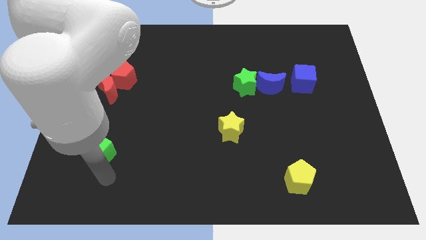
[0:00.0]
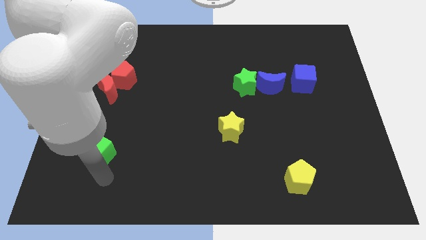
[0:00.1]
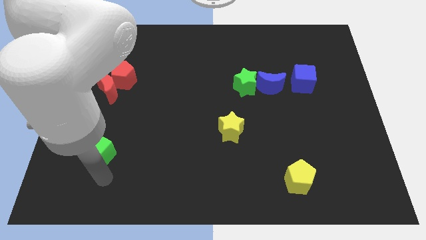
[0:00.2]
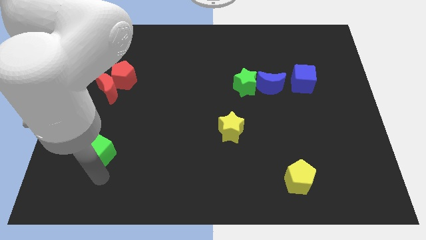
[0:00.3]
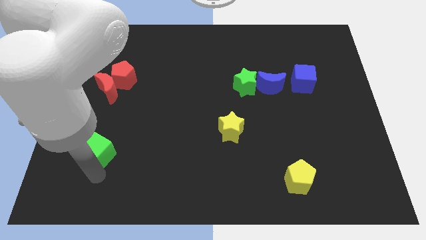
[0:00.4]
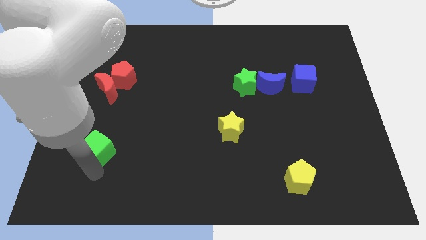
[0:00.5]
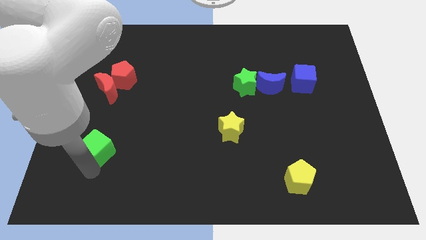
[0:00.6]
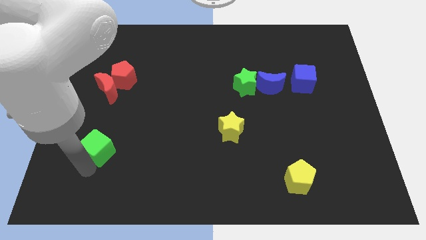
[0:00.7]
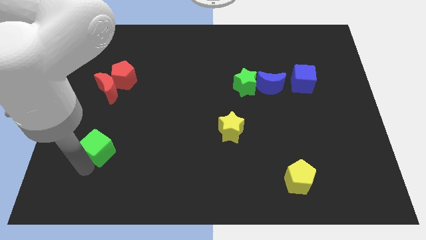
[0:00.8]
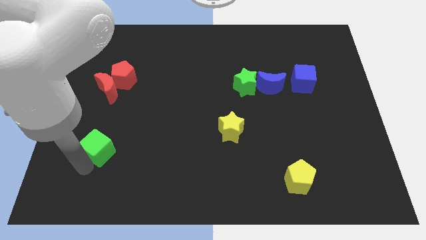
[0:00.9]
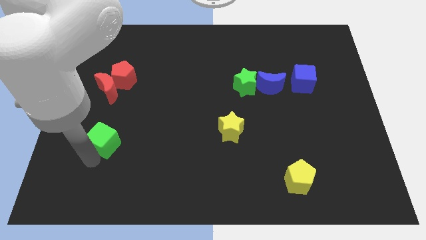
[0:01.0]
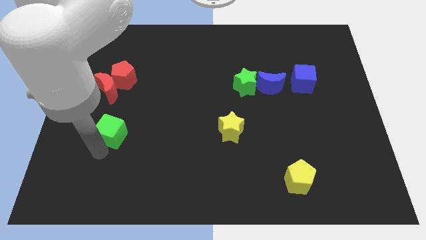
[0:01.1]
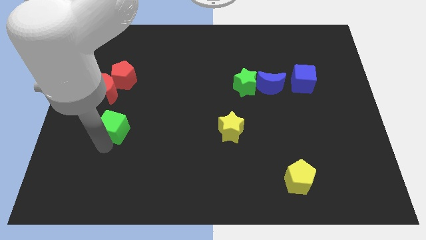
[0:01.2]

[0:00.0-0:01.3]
move the green cube horizontally to the left side of the yellow star

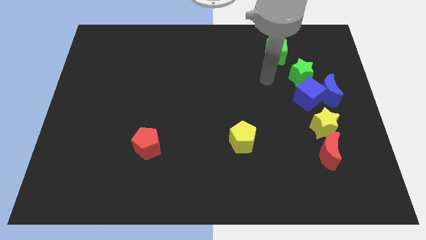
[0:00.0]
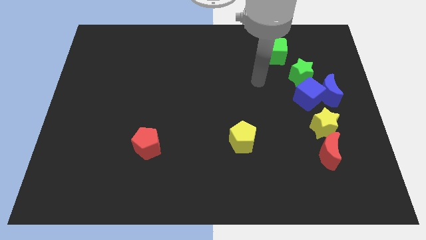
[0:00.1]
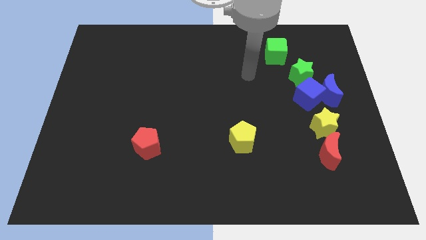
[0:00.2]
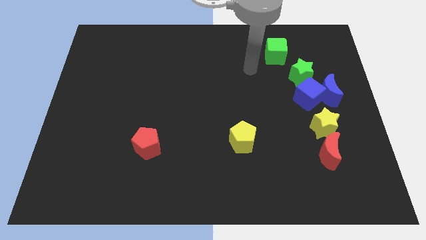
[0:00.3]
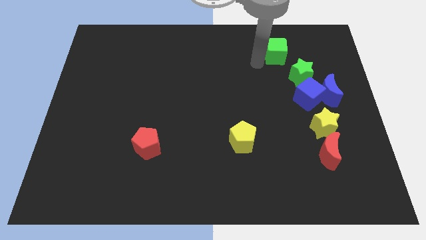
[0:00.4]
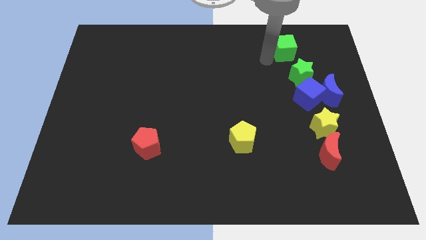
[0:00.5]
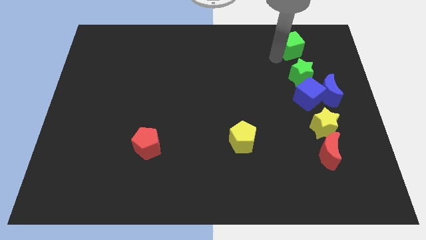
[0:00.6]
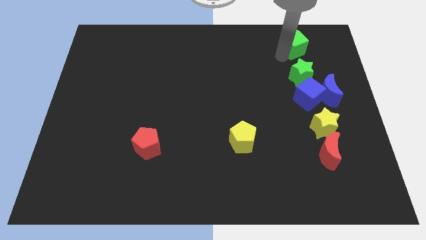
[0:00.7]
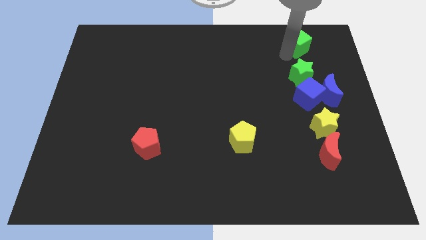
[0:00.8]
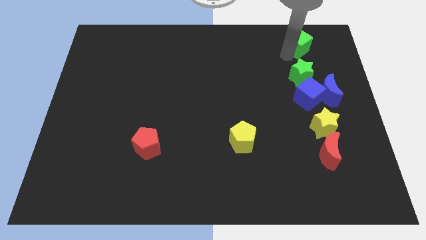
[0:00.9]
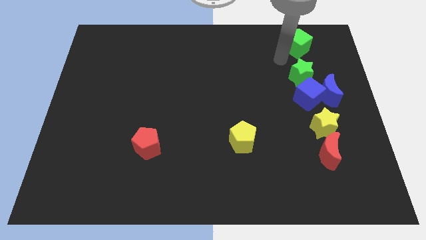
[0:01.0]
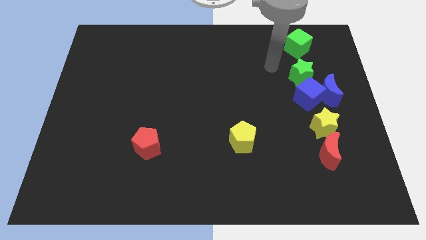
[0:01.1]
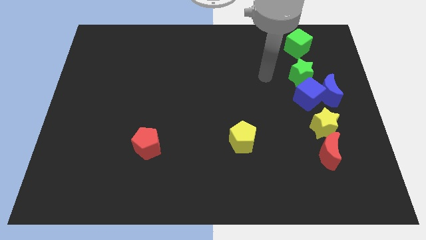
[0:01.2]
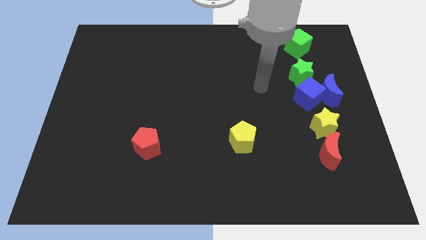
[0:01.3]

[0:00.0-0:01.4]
place the green cube at the top of green star

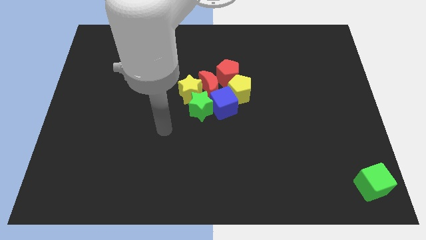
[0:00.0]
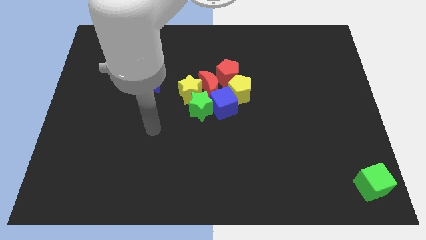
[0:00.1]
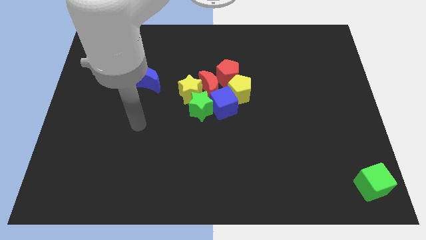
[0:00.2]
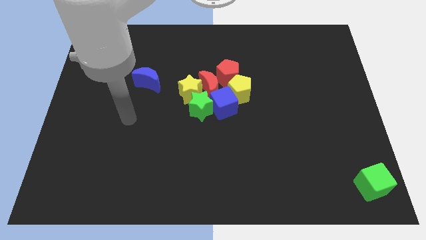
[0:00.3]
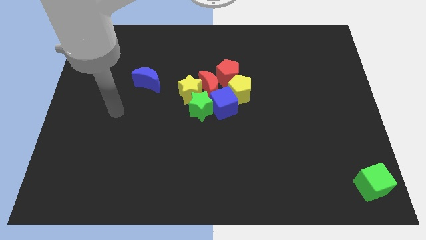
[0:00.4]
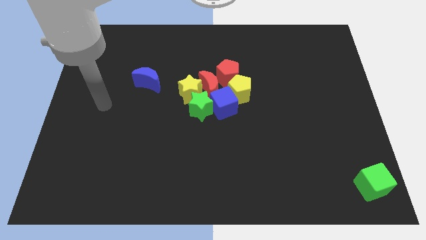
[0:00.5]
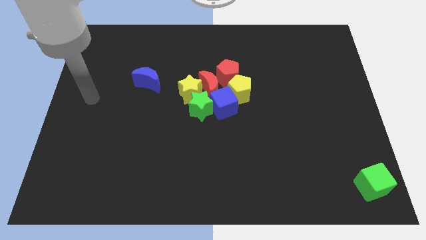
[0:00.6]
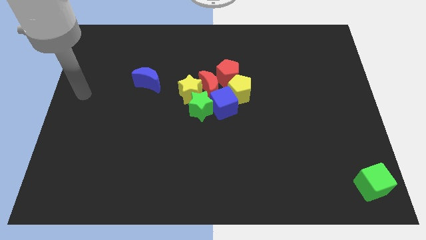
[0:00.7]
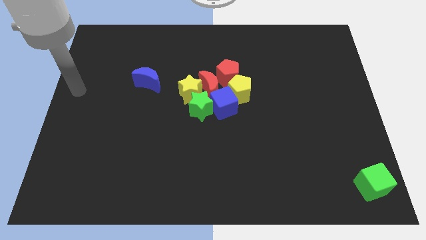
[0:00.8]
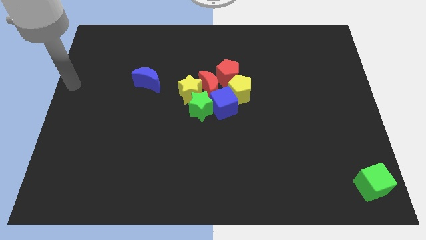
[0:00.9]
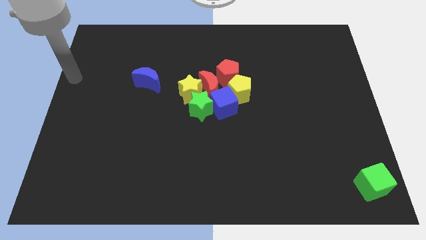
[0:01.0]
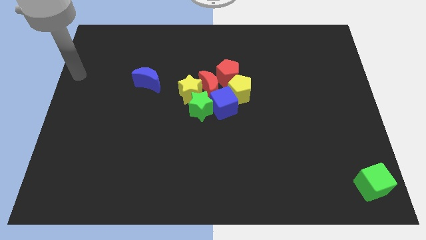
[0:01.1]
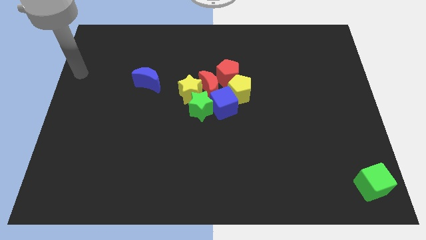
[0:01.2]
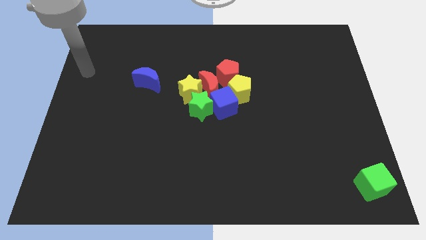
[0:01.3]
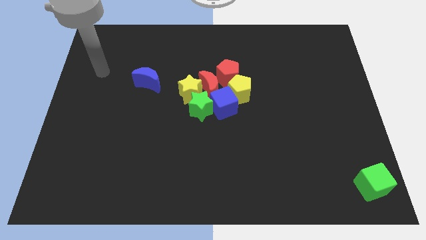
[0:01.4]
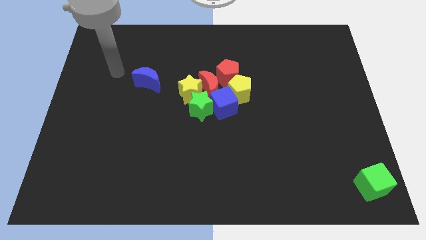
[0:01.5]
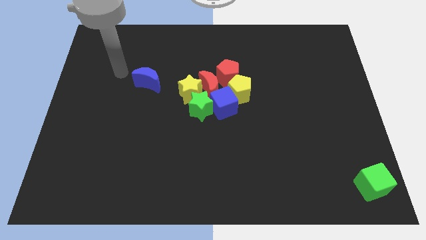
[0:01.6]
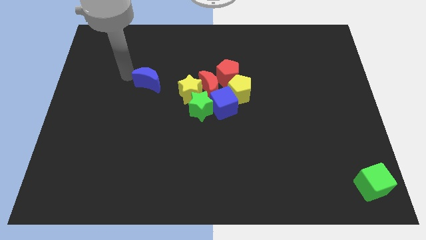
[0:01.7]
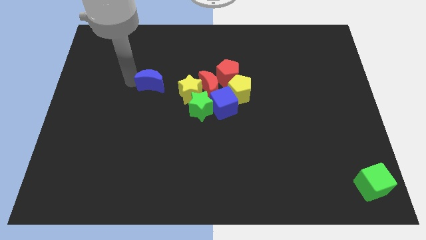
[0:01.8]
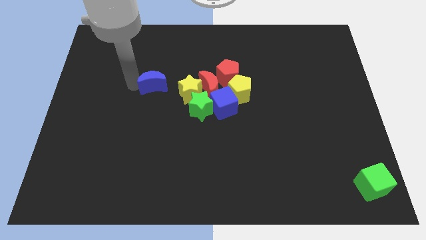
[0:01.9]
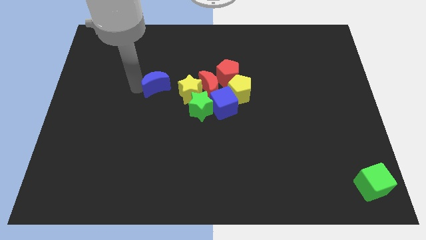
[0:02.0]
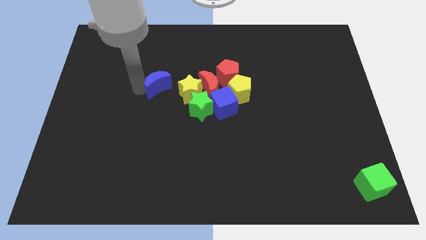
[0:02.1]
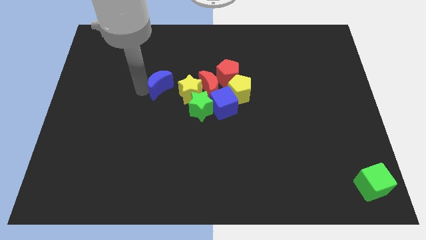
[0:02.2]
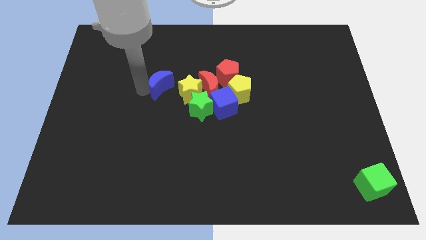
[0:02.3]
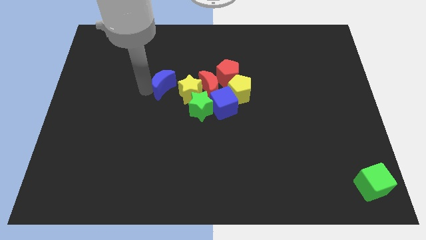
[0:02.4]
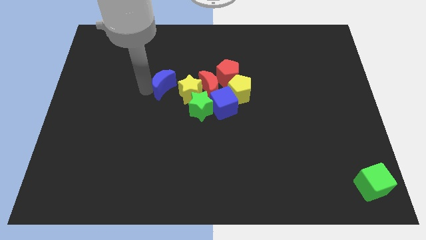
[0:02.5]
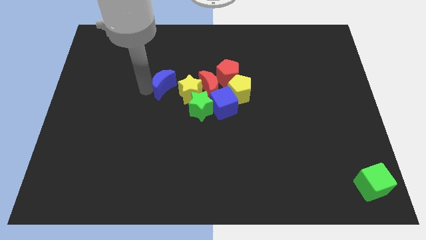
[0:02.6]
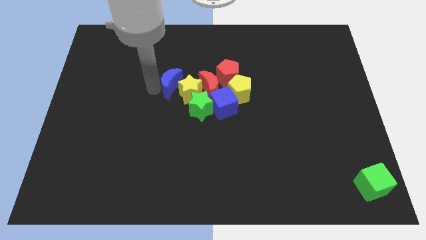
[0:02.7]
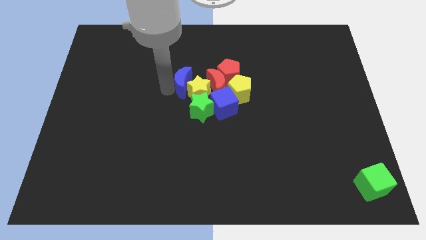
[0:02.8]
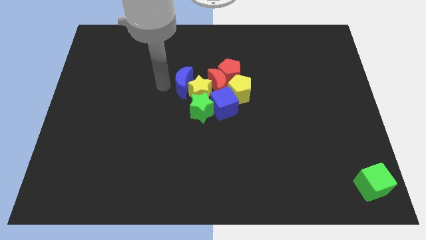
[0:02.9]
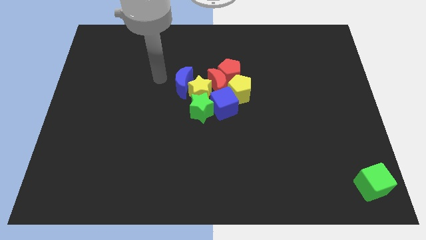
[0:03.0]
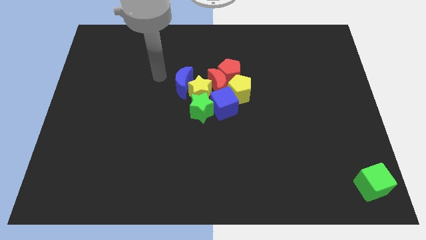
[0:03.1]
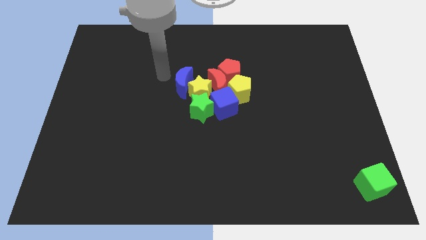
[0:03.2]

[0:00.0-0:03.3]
drag the blue moon towards the yellow star

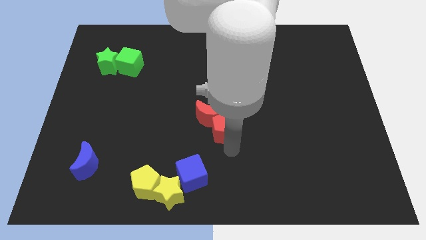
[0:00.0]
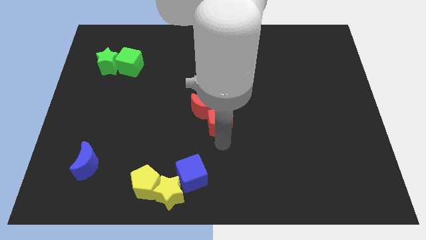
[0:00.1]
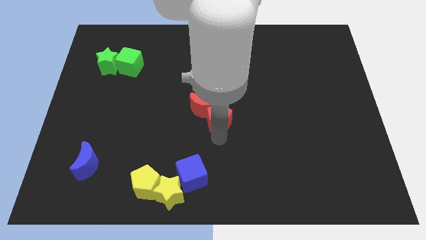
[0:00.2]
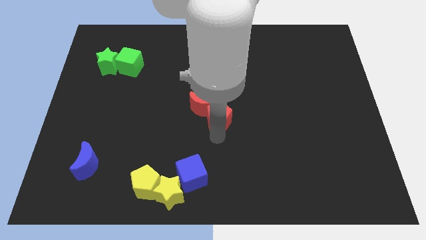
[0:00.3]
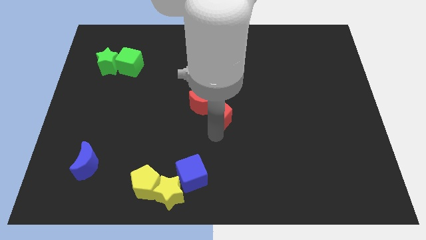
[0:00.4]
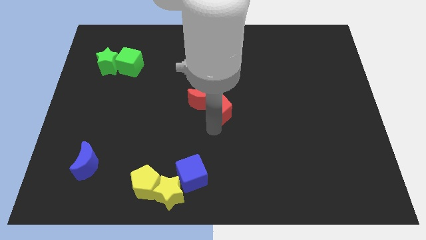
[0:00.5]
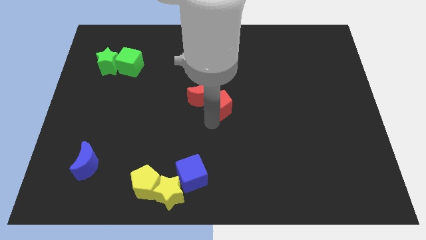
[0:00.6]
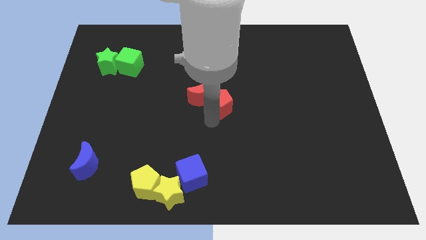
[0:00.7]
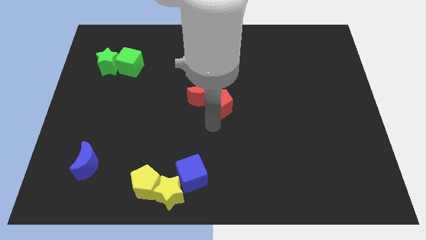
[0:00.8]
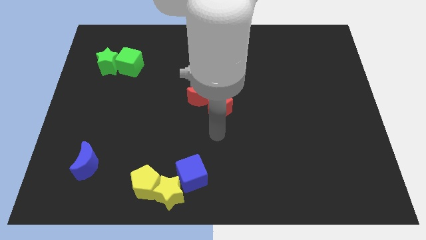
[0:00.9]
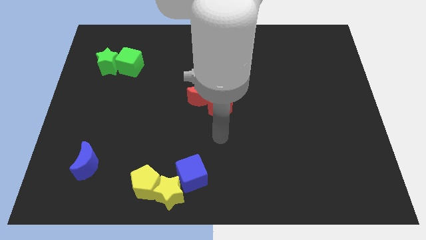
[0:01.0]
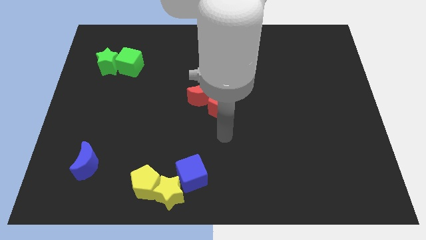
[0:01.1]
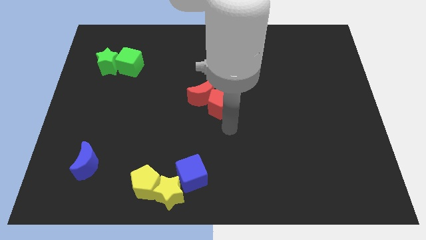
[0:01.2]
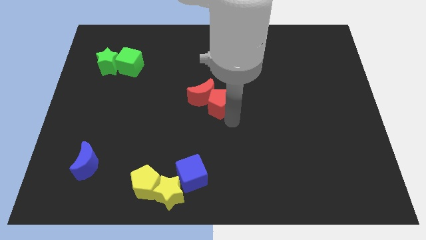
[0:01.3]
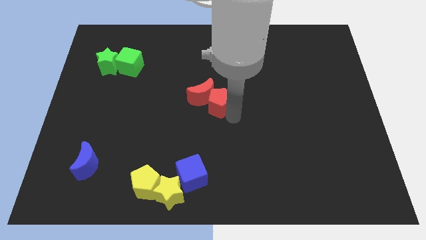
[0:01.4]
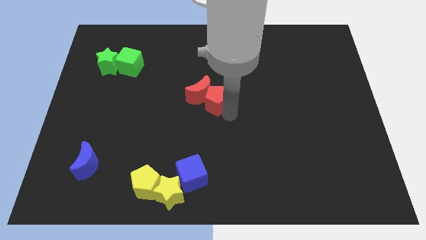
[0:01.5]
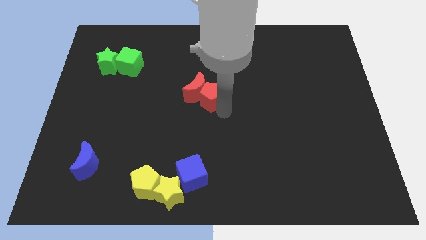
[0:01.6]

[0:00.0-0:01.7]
place the red blocks at center of the board

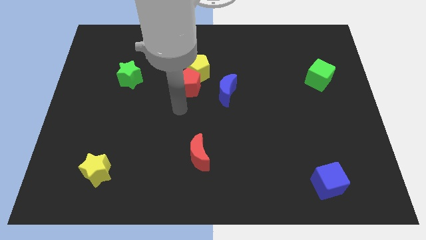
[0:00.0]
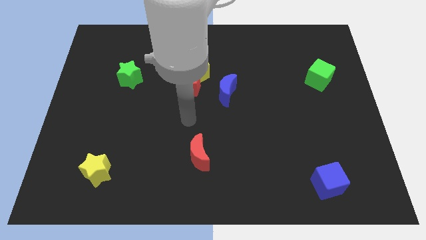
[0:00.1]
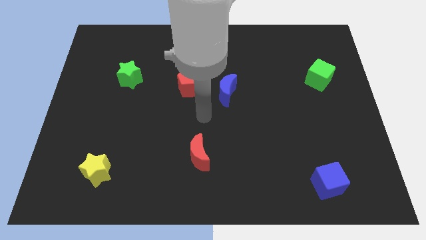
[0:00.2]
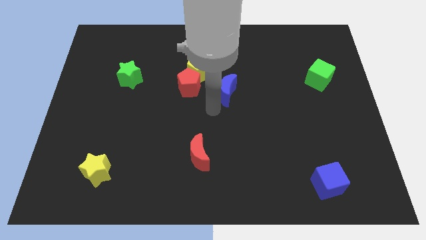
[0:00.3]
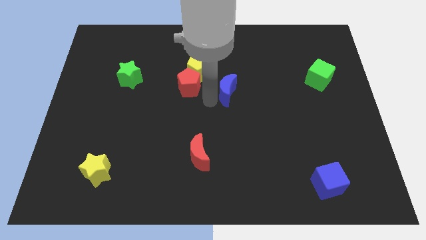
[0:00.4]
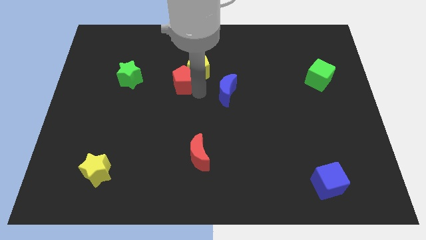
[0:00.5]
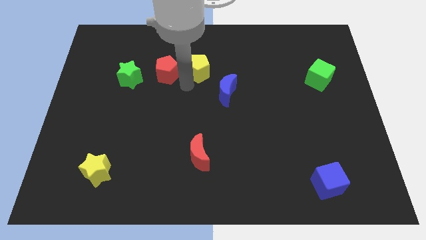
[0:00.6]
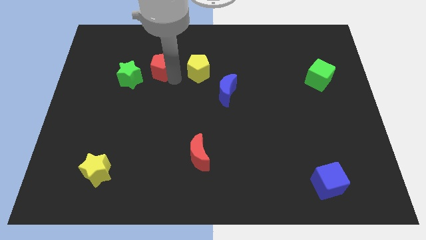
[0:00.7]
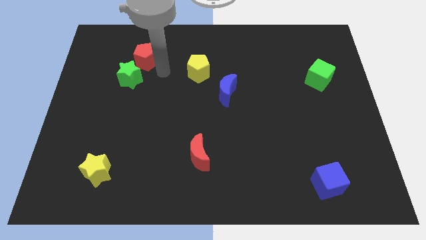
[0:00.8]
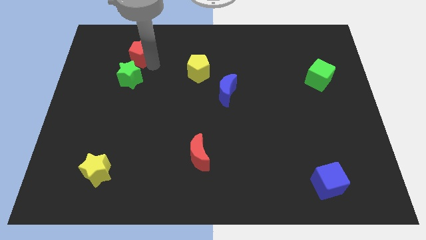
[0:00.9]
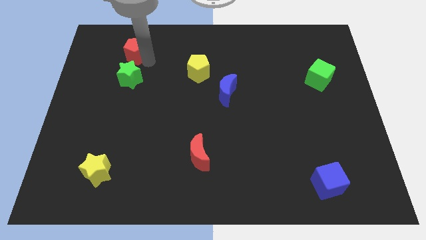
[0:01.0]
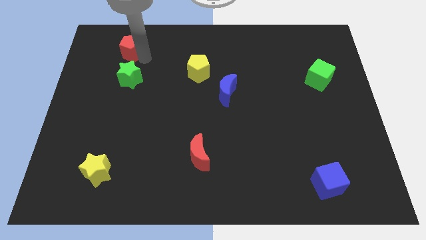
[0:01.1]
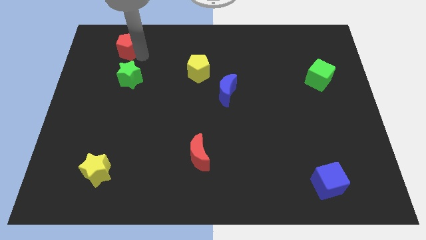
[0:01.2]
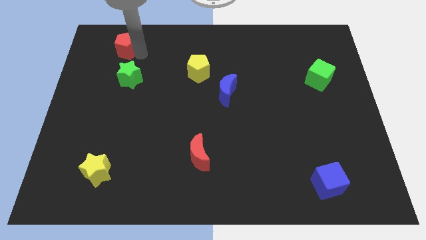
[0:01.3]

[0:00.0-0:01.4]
move the red pentagon towards top left corner
